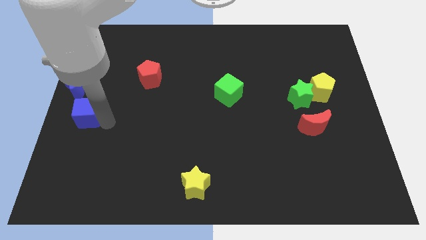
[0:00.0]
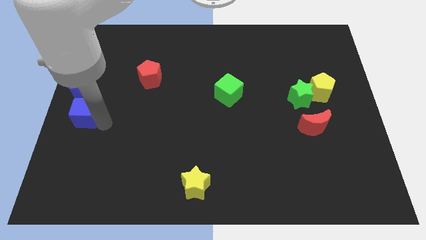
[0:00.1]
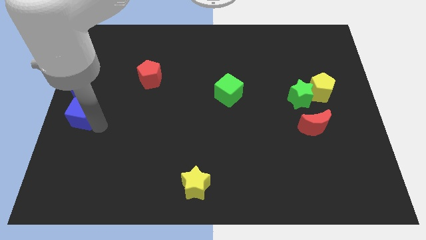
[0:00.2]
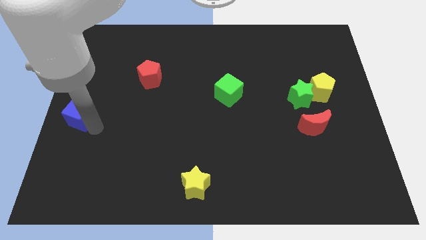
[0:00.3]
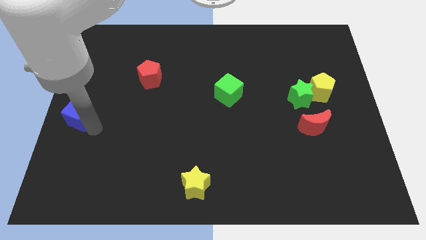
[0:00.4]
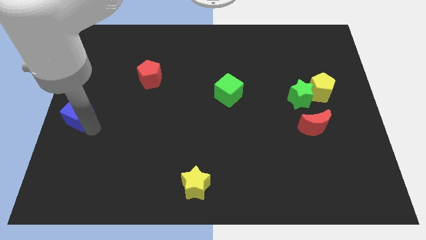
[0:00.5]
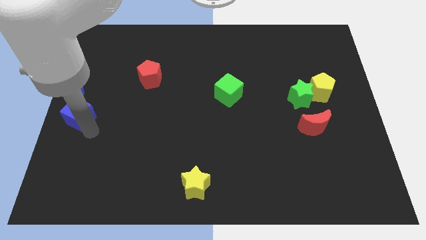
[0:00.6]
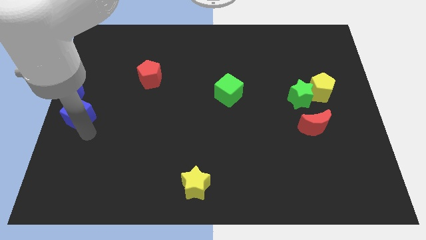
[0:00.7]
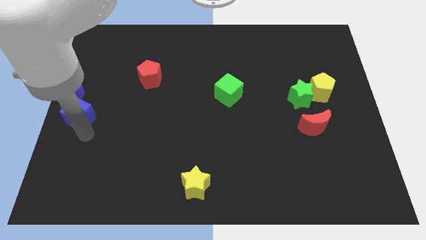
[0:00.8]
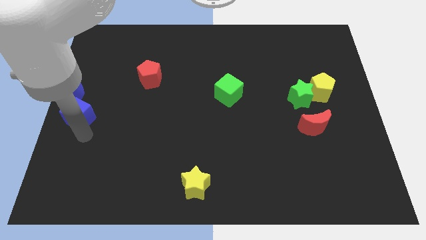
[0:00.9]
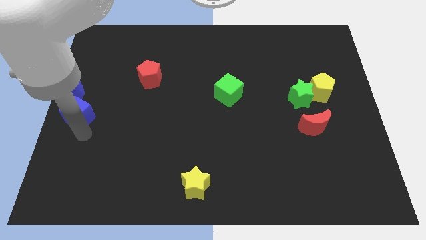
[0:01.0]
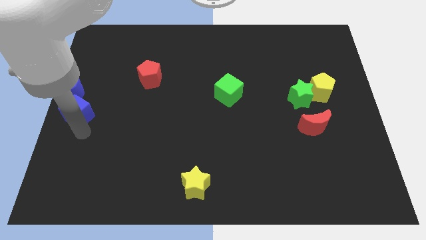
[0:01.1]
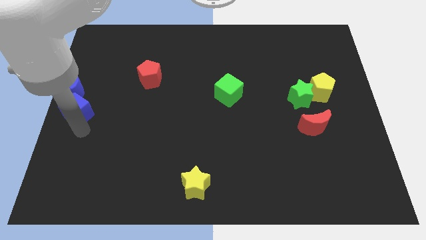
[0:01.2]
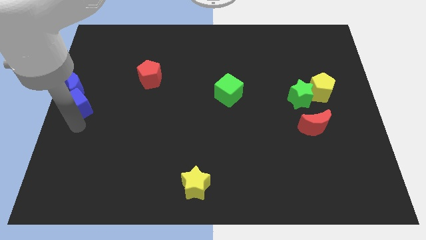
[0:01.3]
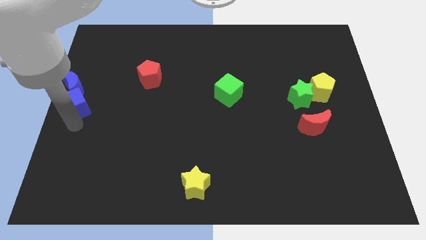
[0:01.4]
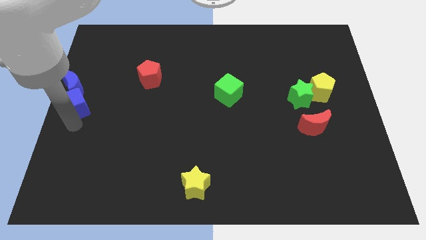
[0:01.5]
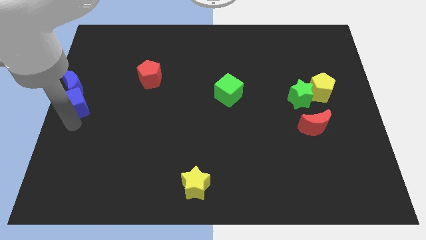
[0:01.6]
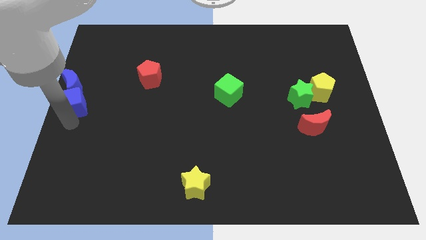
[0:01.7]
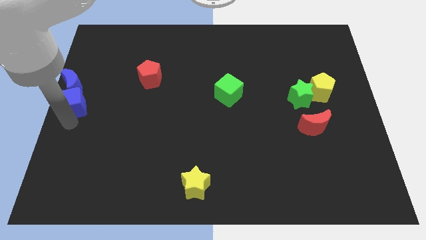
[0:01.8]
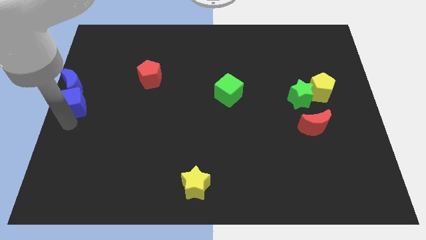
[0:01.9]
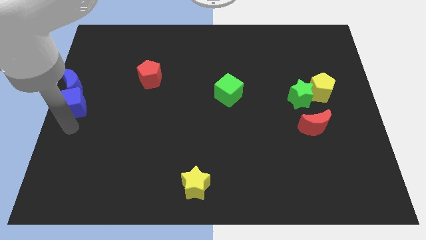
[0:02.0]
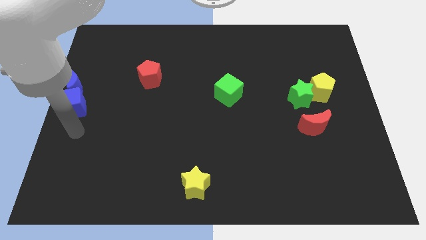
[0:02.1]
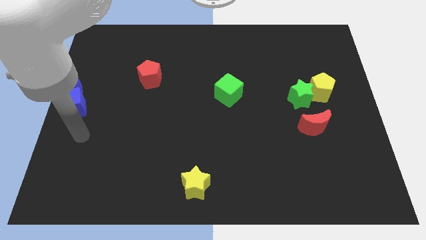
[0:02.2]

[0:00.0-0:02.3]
push blue cube into the blue crescent

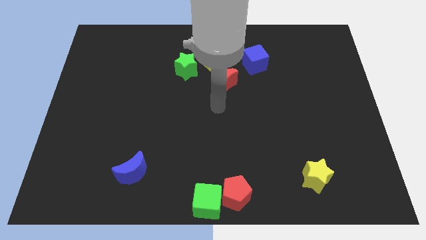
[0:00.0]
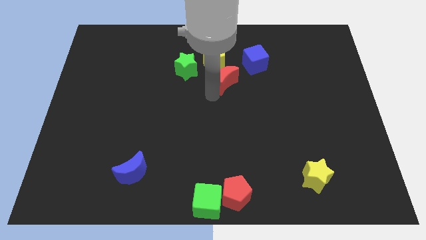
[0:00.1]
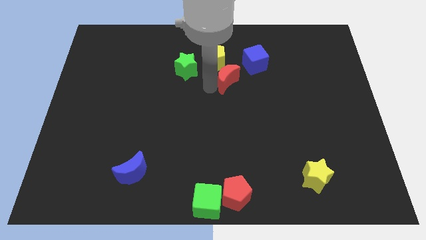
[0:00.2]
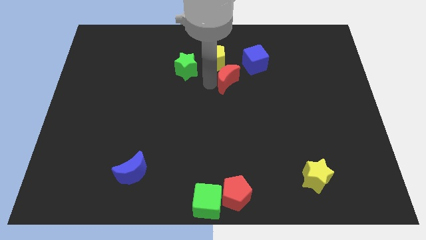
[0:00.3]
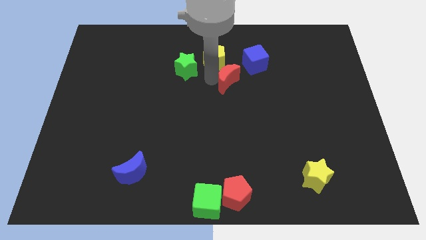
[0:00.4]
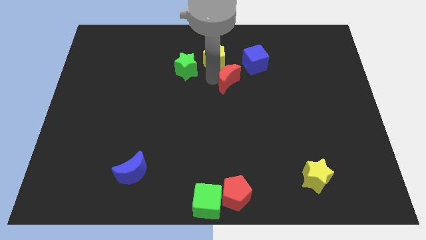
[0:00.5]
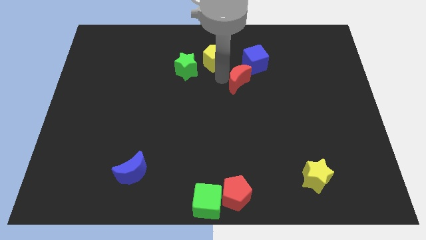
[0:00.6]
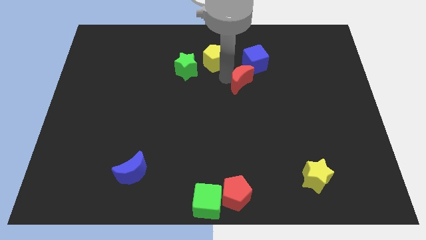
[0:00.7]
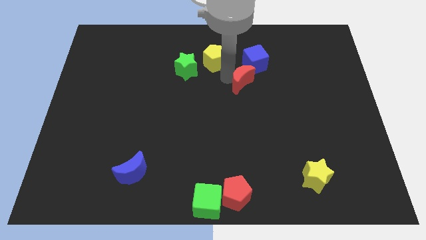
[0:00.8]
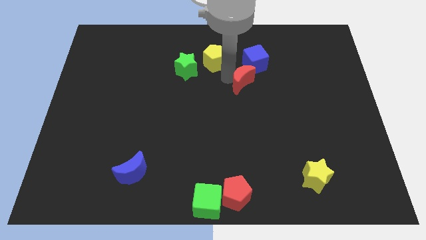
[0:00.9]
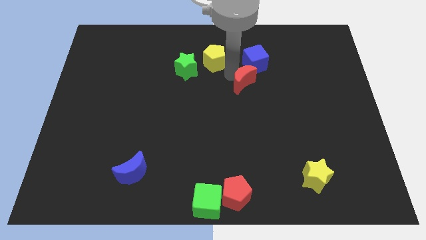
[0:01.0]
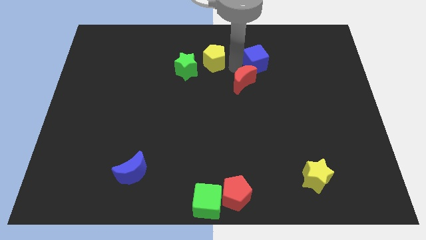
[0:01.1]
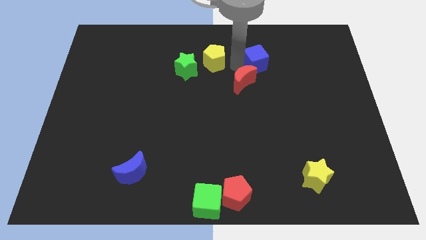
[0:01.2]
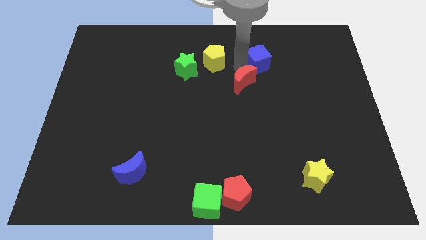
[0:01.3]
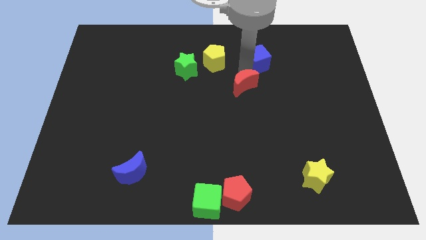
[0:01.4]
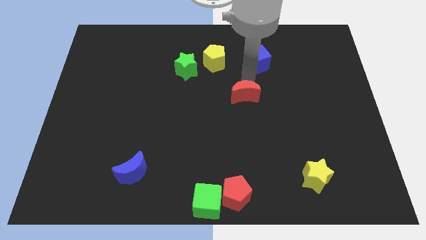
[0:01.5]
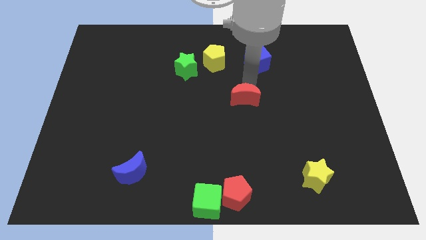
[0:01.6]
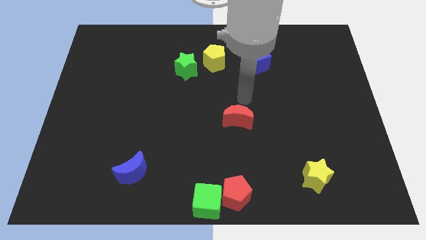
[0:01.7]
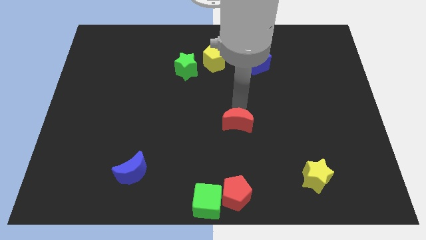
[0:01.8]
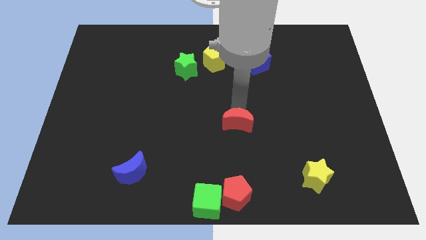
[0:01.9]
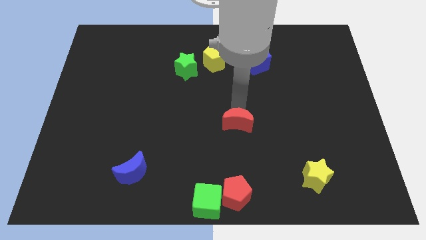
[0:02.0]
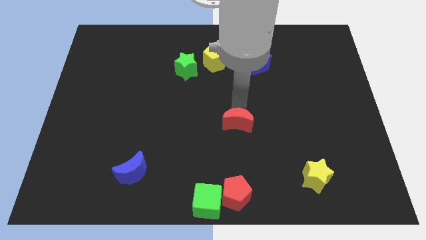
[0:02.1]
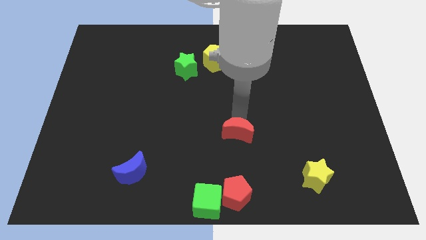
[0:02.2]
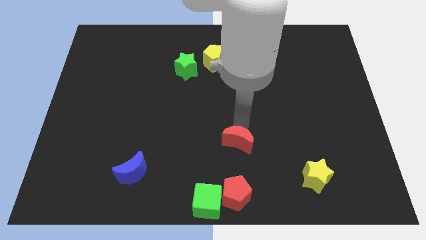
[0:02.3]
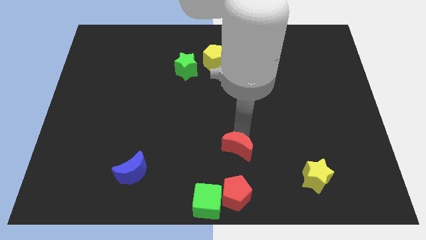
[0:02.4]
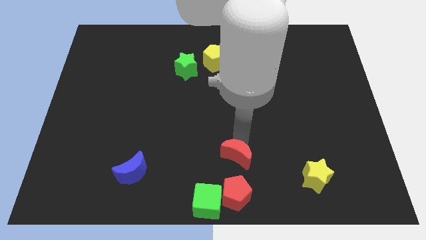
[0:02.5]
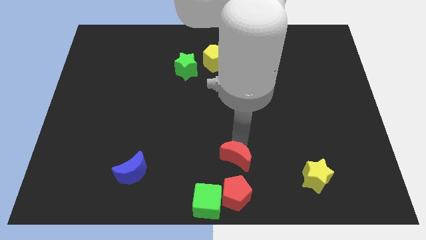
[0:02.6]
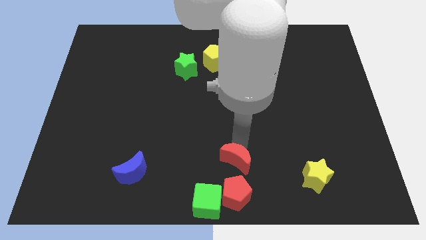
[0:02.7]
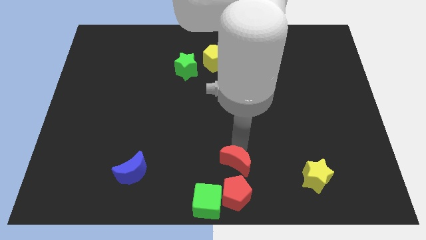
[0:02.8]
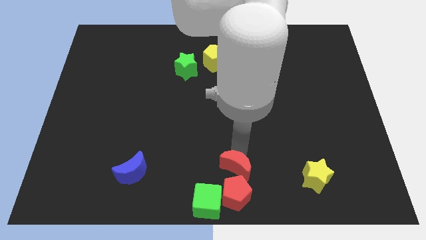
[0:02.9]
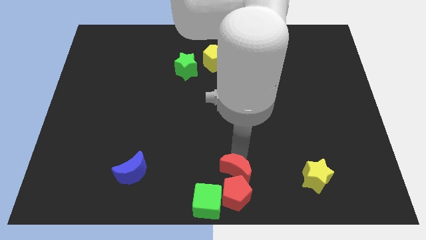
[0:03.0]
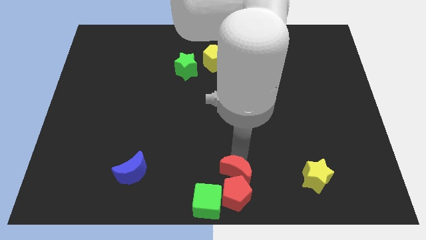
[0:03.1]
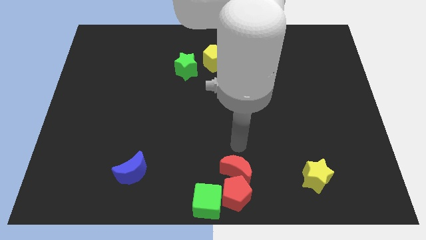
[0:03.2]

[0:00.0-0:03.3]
place the red moon above the red pentagon

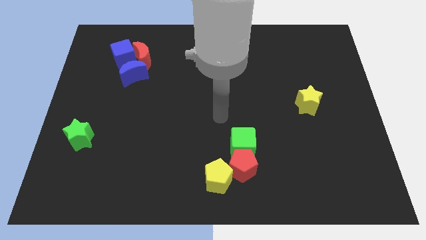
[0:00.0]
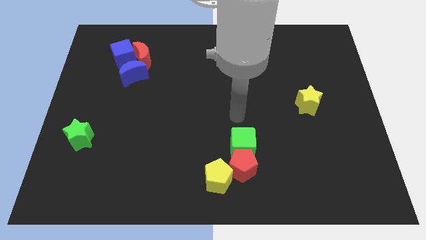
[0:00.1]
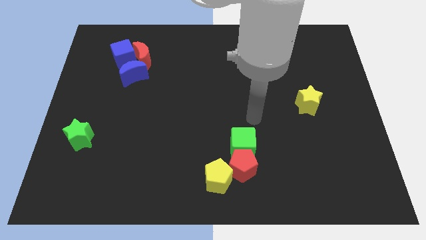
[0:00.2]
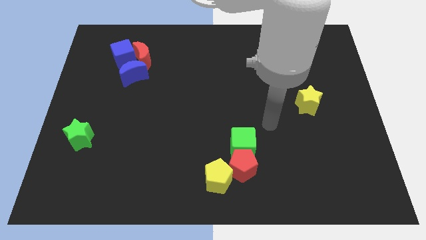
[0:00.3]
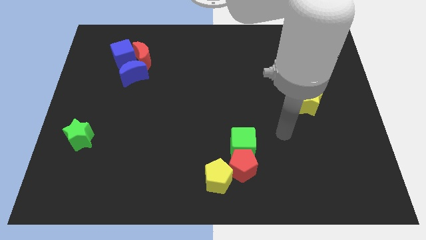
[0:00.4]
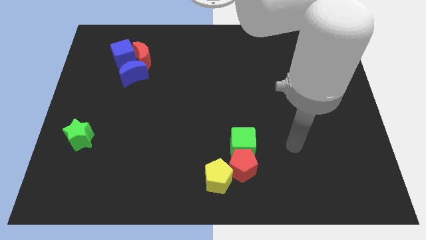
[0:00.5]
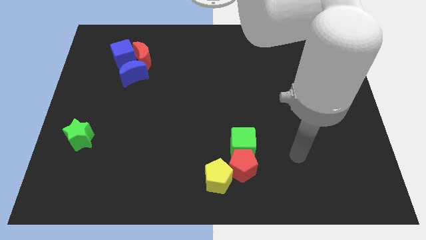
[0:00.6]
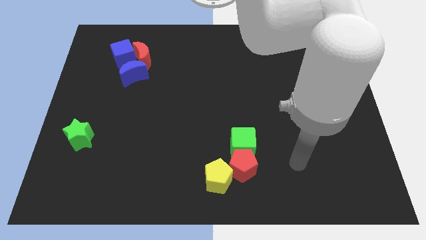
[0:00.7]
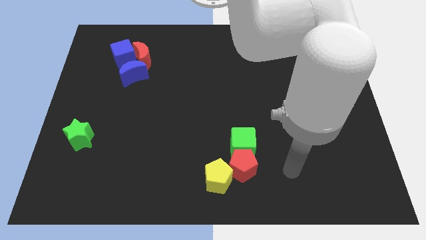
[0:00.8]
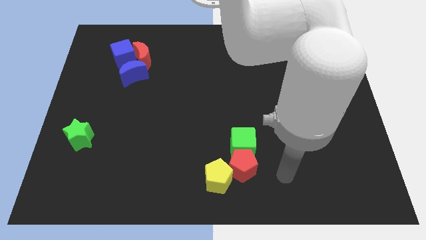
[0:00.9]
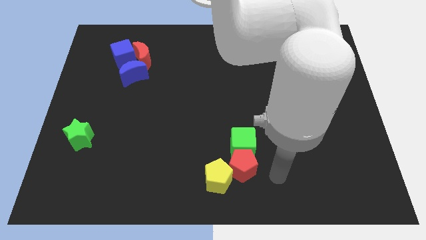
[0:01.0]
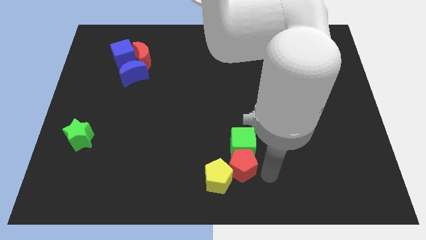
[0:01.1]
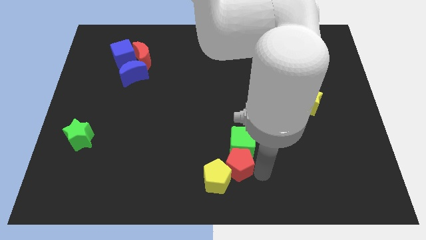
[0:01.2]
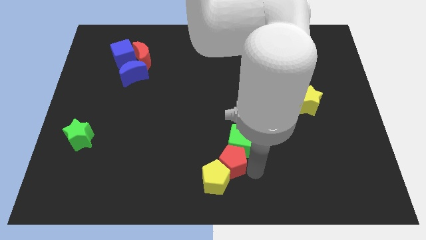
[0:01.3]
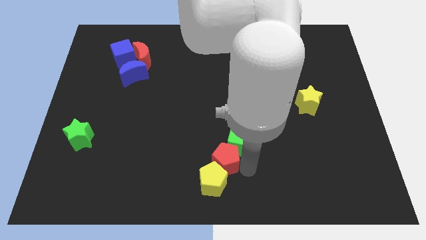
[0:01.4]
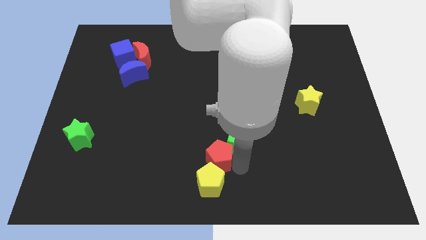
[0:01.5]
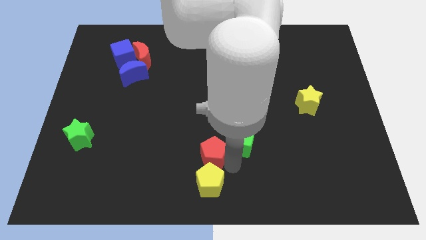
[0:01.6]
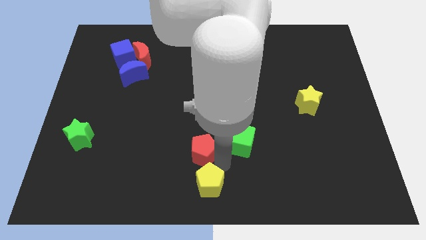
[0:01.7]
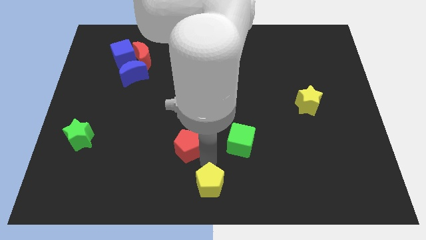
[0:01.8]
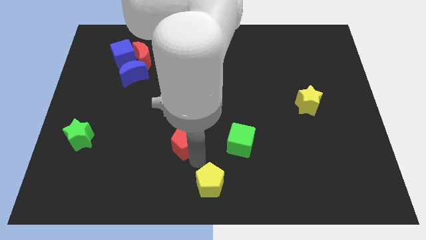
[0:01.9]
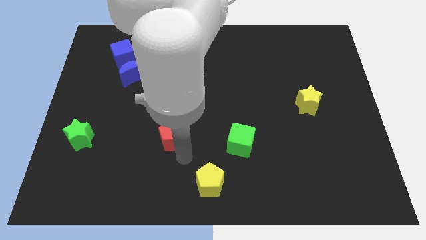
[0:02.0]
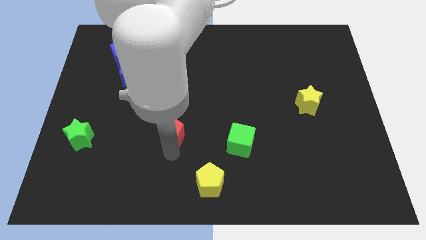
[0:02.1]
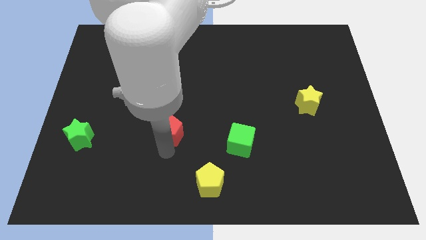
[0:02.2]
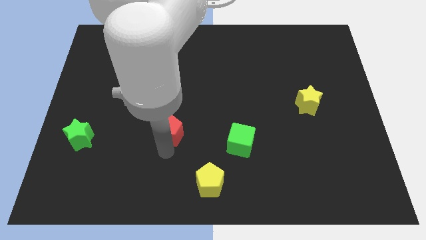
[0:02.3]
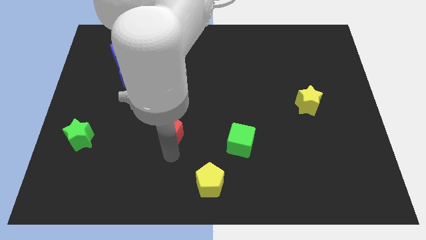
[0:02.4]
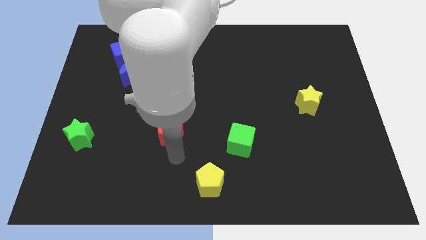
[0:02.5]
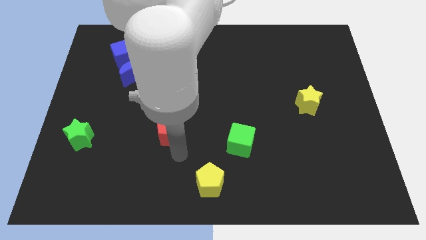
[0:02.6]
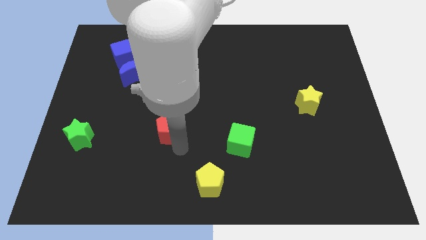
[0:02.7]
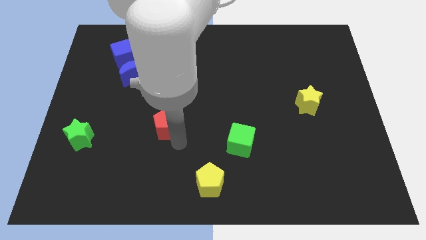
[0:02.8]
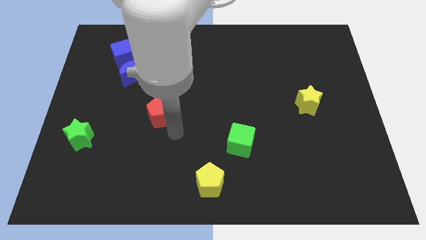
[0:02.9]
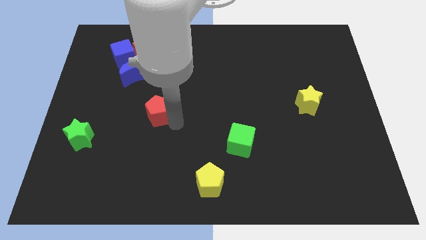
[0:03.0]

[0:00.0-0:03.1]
separate the red pentagon from green cube

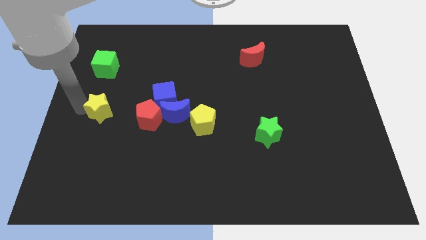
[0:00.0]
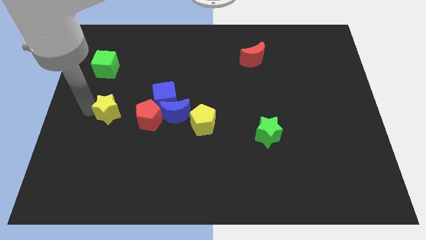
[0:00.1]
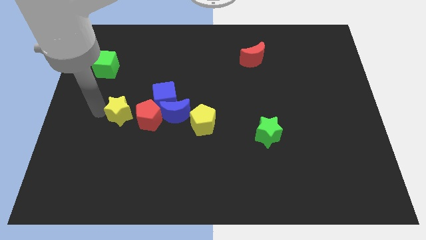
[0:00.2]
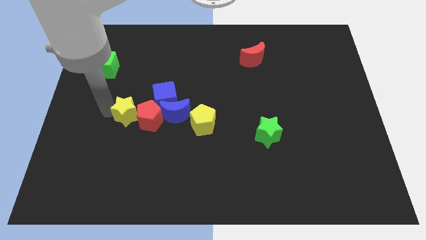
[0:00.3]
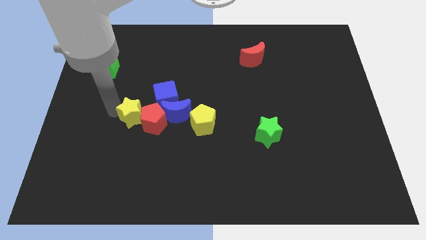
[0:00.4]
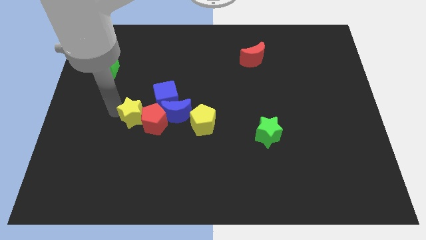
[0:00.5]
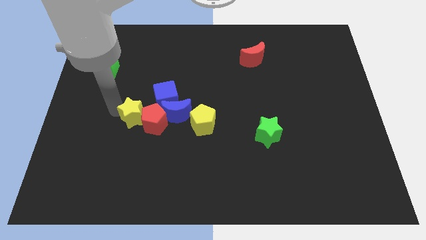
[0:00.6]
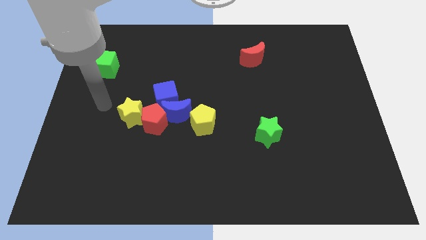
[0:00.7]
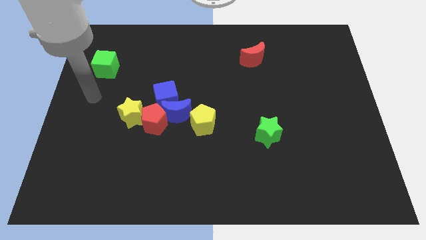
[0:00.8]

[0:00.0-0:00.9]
push the yellow star into the red pentagon
